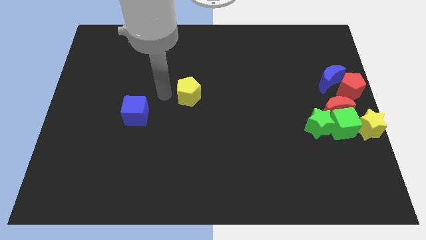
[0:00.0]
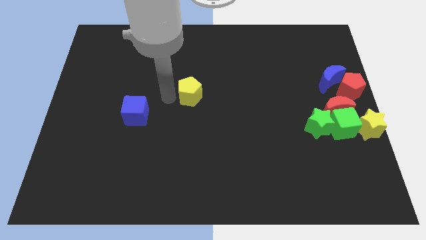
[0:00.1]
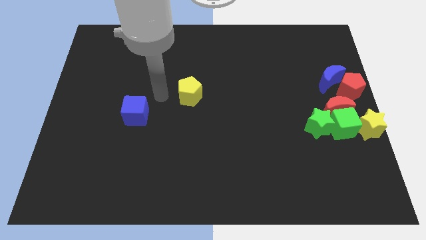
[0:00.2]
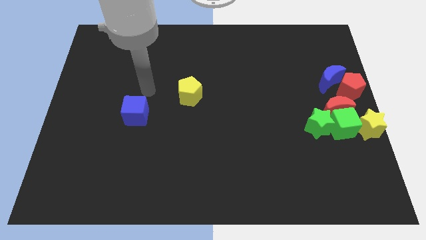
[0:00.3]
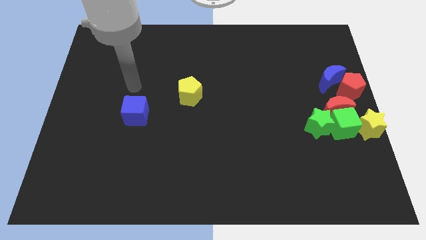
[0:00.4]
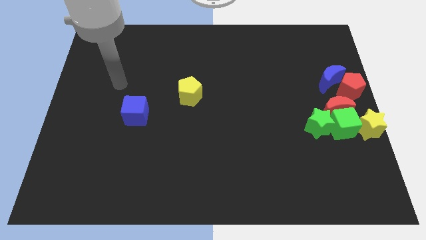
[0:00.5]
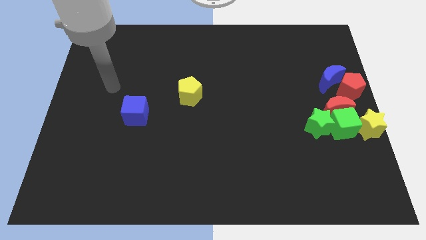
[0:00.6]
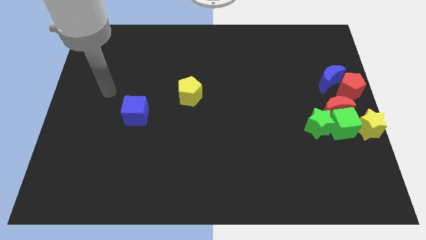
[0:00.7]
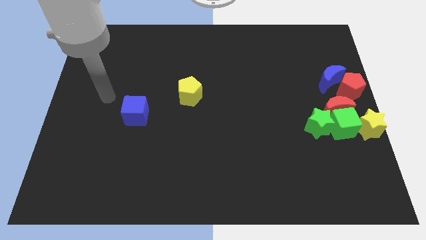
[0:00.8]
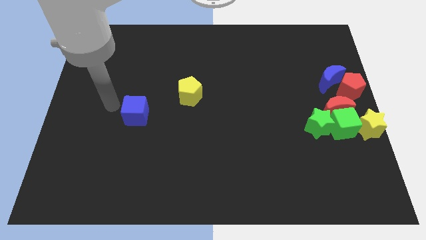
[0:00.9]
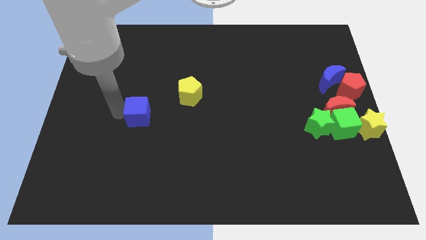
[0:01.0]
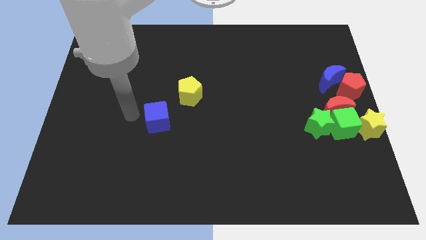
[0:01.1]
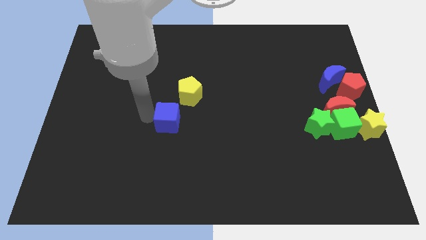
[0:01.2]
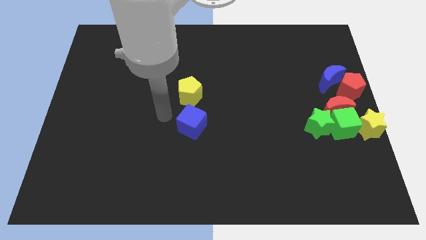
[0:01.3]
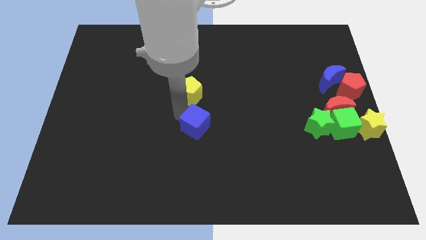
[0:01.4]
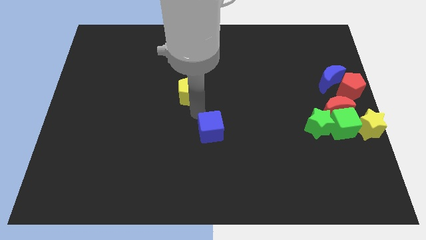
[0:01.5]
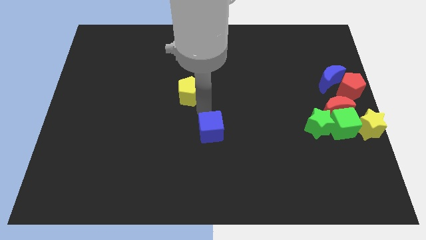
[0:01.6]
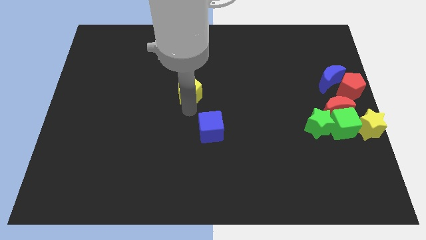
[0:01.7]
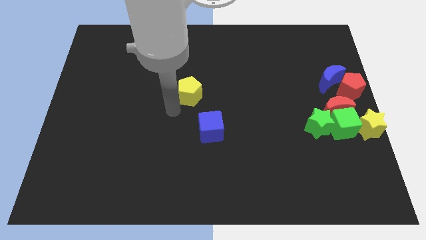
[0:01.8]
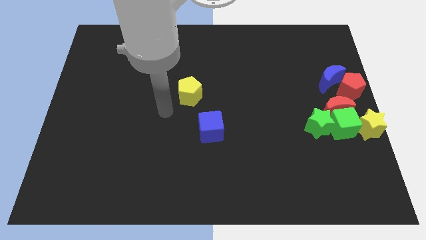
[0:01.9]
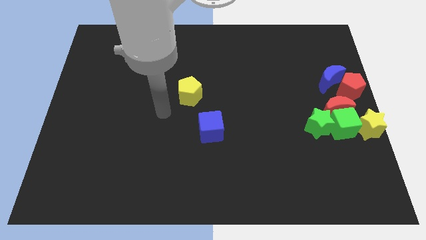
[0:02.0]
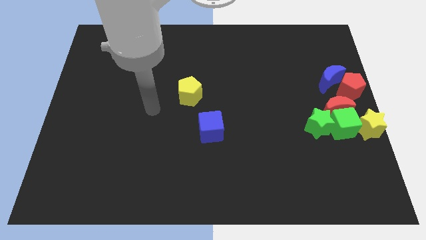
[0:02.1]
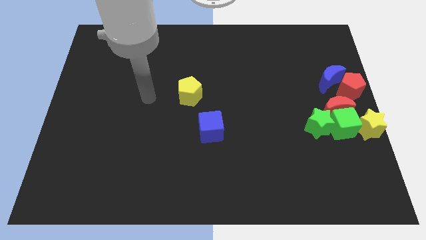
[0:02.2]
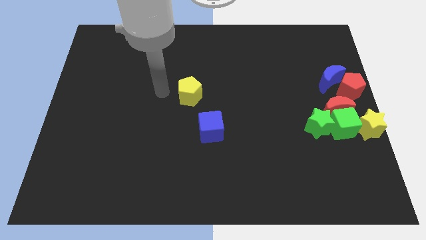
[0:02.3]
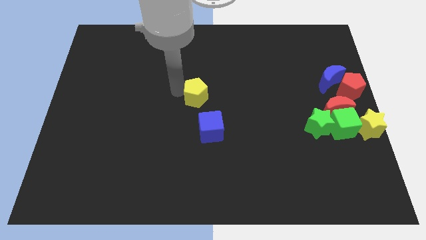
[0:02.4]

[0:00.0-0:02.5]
push the blue cube to the bottom of the yellow pentagon

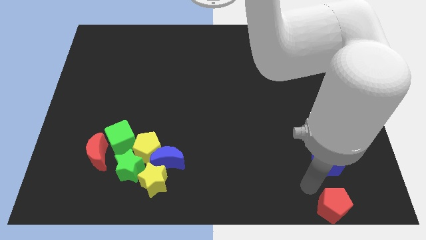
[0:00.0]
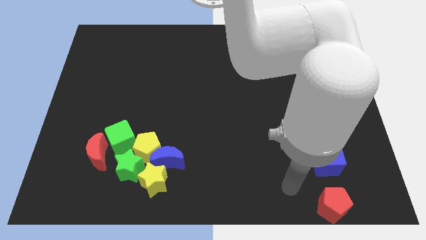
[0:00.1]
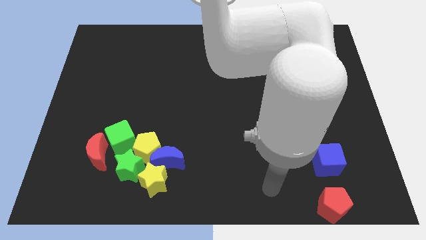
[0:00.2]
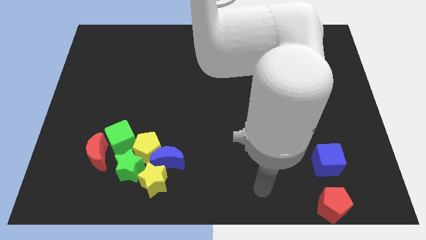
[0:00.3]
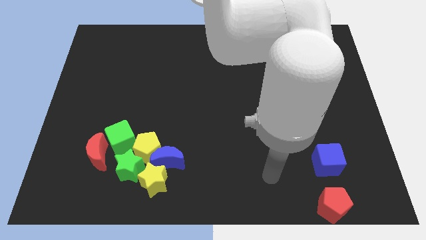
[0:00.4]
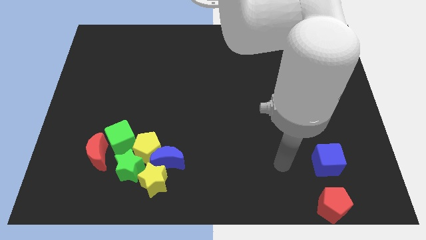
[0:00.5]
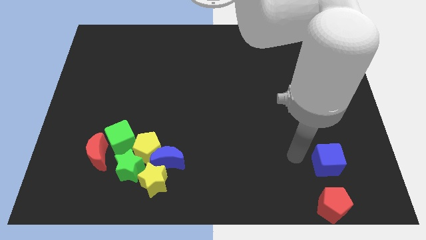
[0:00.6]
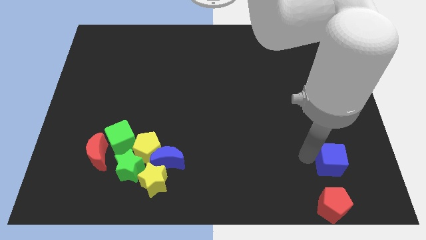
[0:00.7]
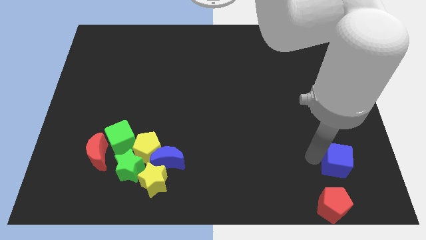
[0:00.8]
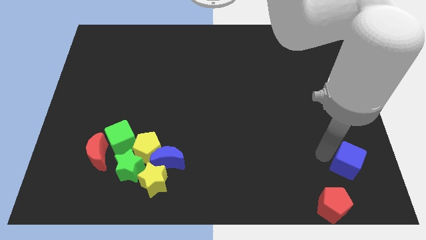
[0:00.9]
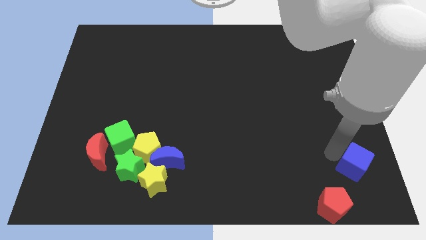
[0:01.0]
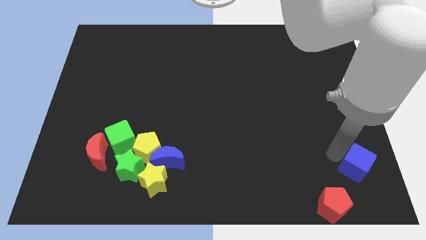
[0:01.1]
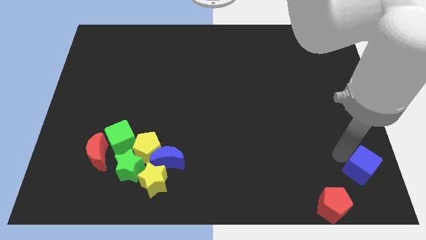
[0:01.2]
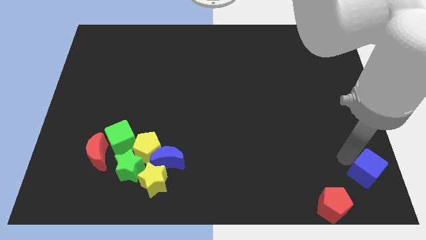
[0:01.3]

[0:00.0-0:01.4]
push the blue cube to the top right of the red pentagon

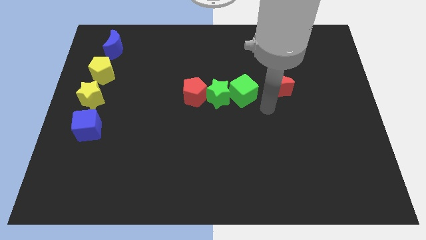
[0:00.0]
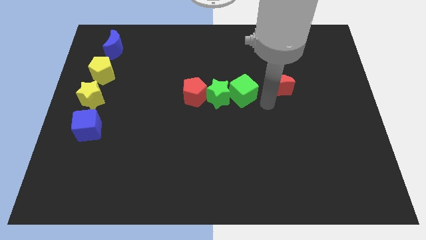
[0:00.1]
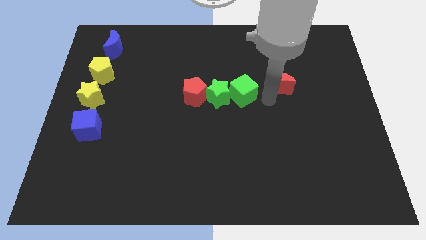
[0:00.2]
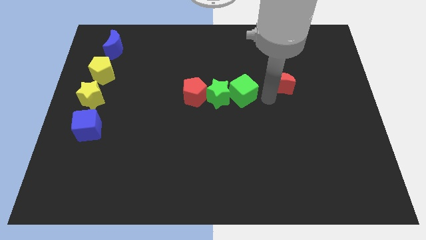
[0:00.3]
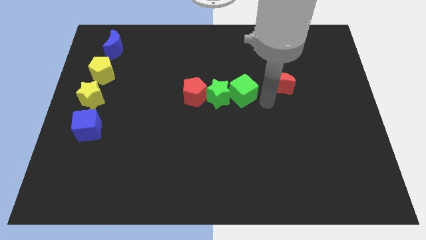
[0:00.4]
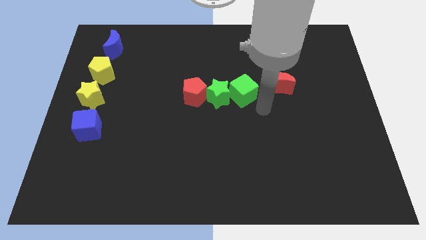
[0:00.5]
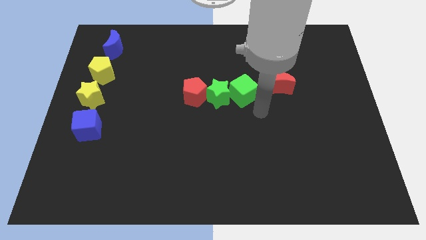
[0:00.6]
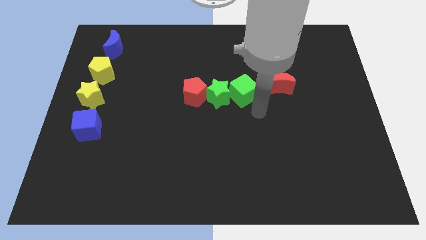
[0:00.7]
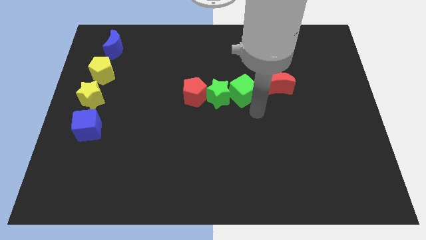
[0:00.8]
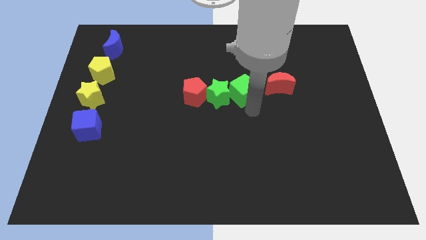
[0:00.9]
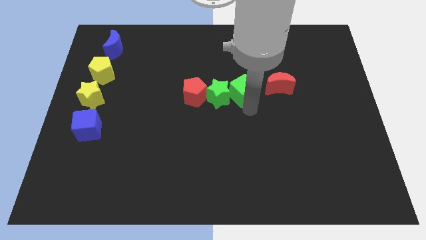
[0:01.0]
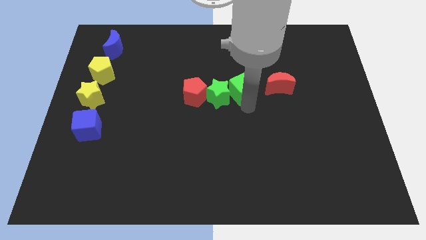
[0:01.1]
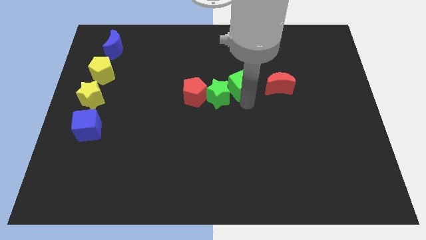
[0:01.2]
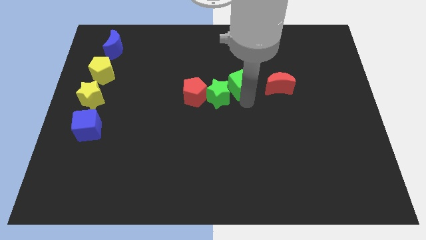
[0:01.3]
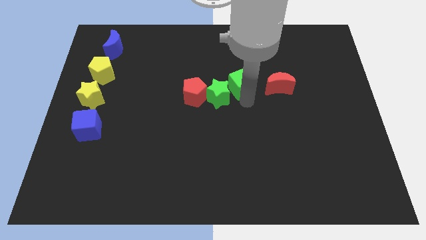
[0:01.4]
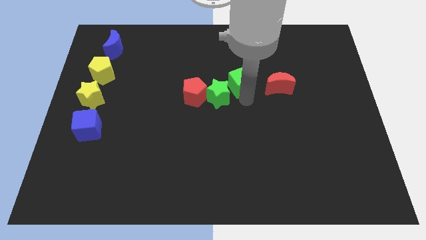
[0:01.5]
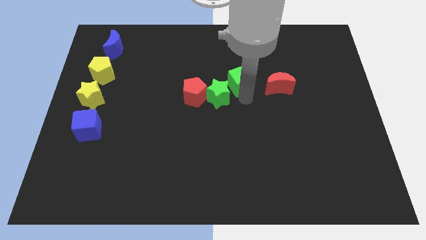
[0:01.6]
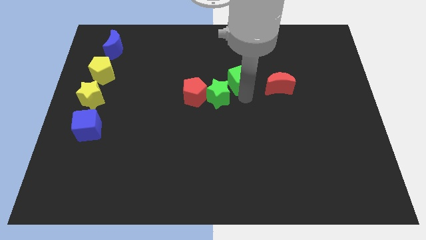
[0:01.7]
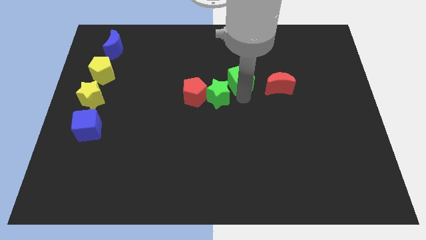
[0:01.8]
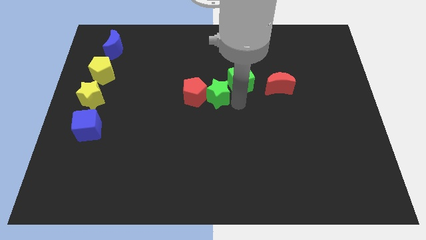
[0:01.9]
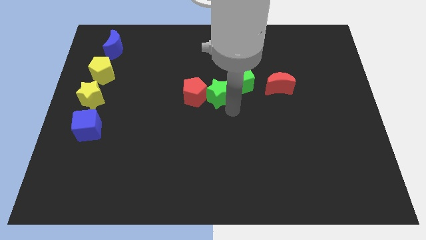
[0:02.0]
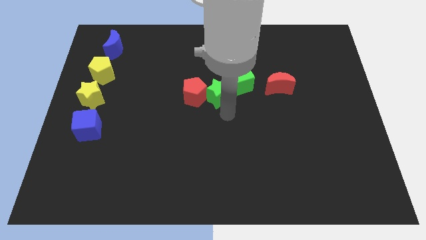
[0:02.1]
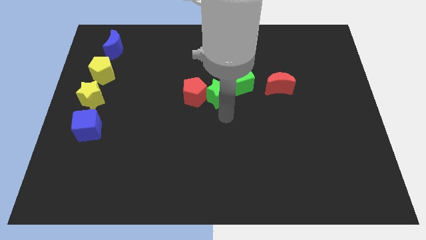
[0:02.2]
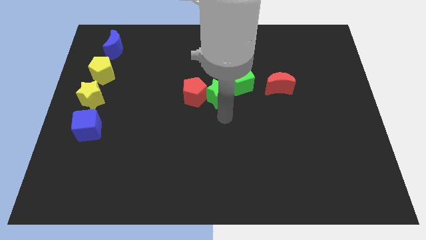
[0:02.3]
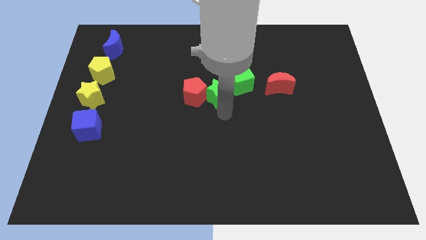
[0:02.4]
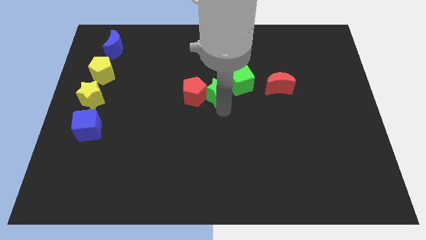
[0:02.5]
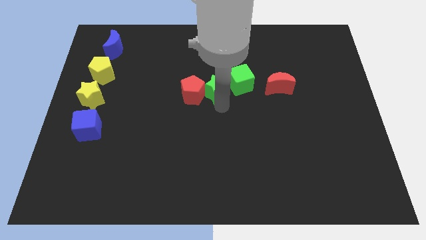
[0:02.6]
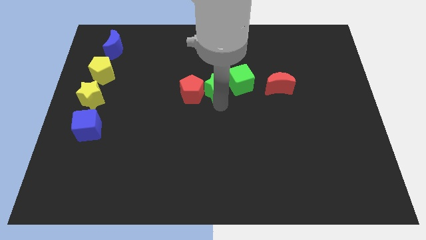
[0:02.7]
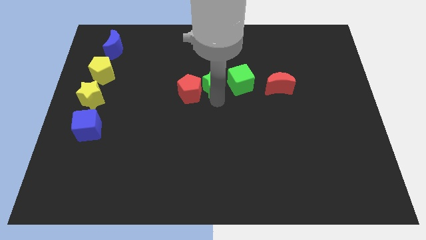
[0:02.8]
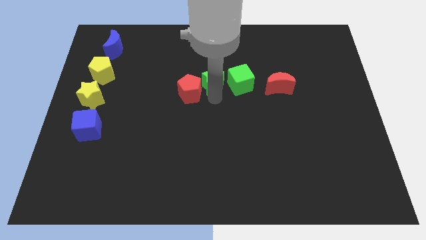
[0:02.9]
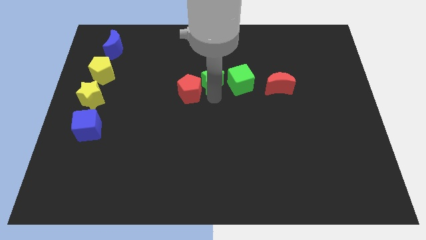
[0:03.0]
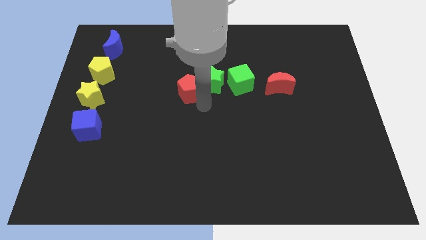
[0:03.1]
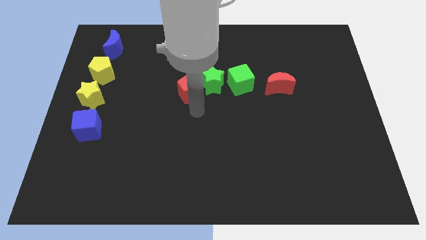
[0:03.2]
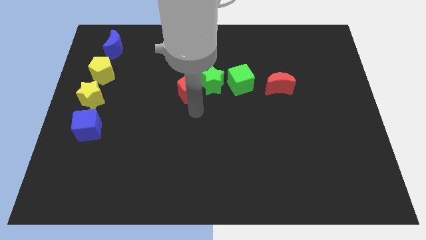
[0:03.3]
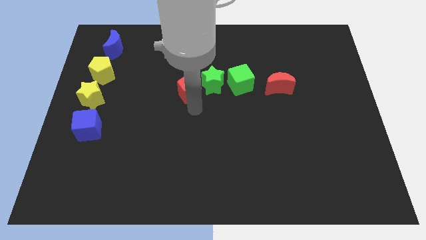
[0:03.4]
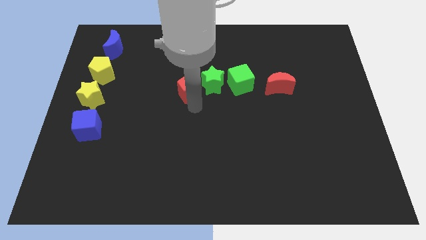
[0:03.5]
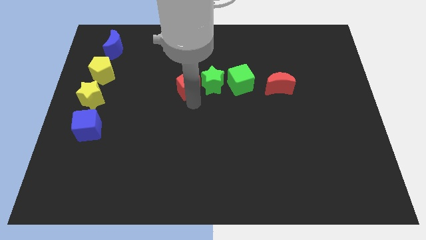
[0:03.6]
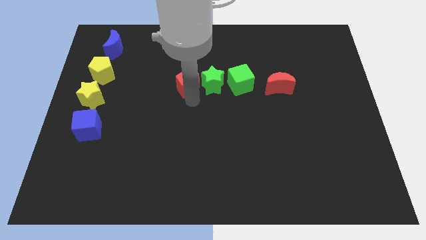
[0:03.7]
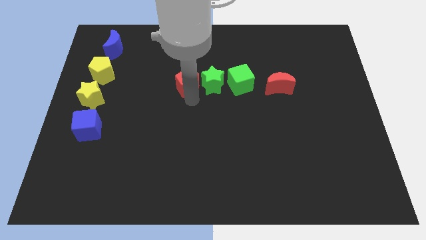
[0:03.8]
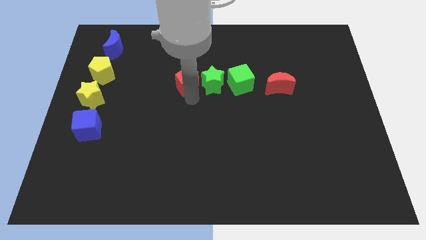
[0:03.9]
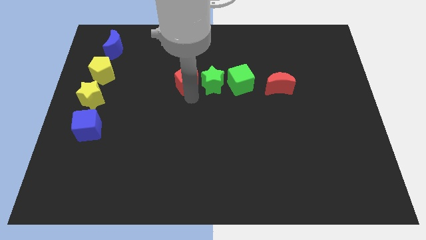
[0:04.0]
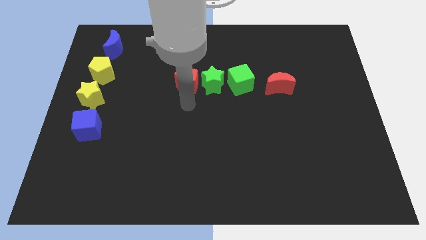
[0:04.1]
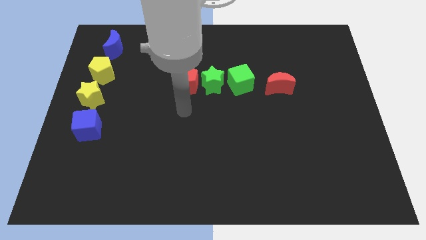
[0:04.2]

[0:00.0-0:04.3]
adjust the objects in a row

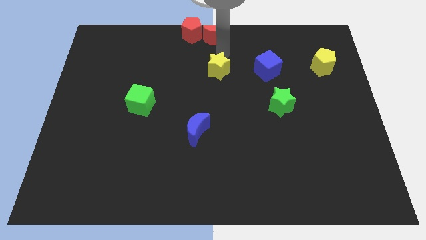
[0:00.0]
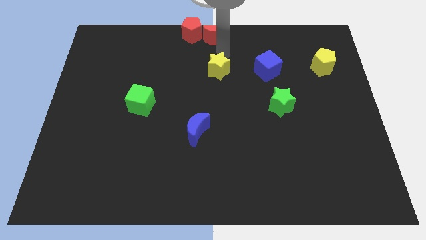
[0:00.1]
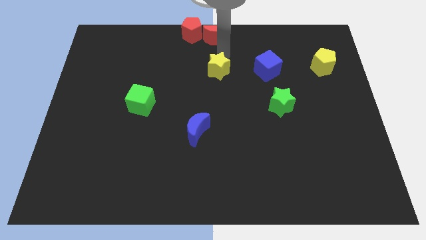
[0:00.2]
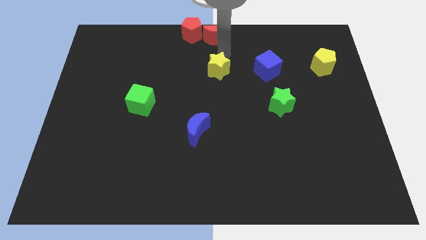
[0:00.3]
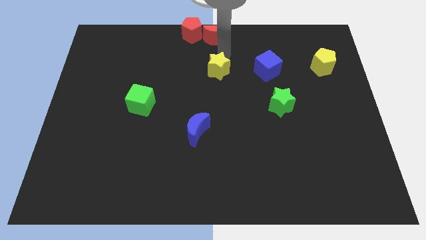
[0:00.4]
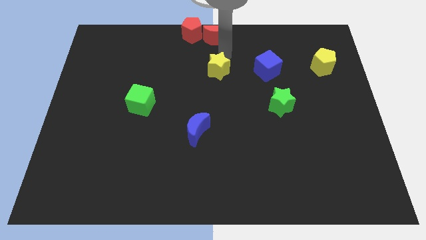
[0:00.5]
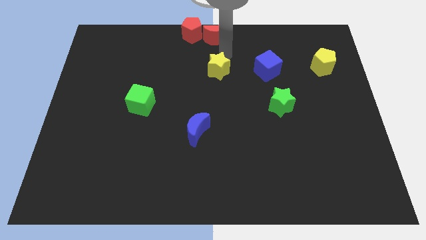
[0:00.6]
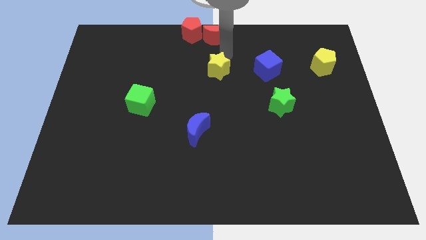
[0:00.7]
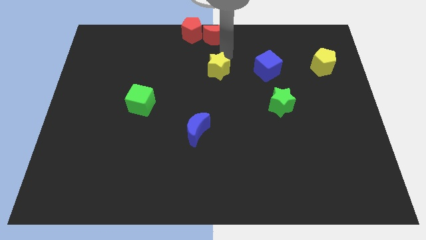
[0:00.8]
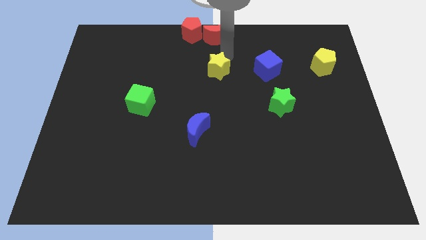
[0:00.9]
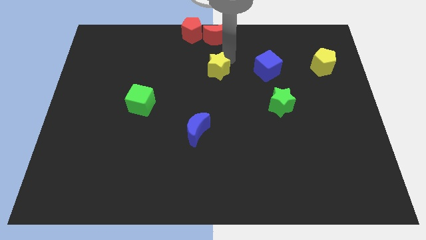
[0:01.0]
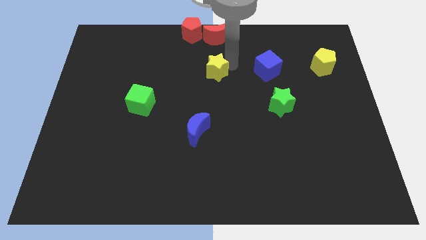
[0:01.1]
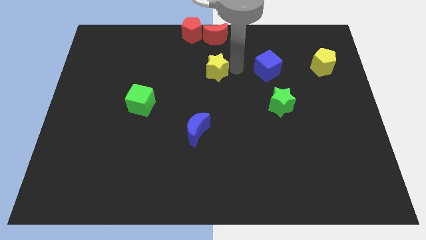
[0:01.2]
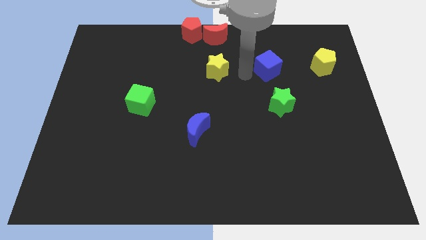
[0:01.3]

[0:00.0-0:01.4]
move your arm to the right of yellow star
